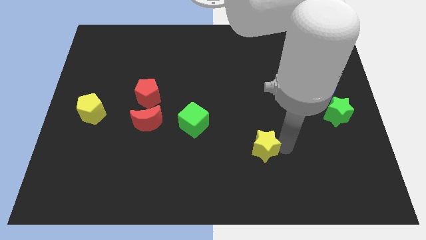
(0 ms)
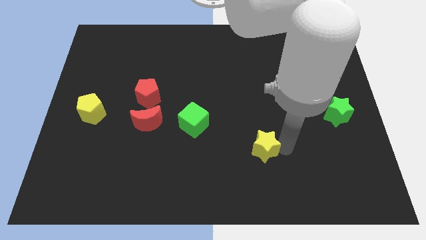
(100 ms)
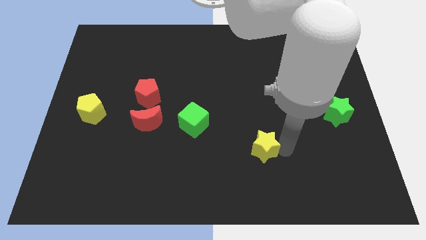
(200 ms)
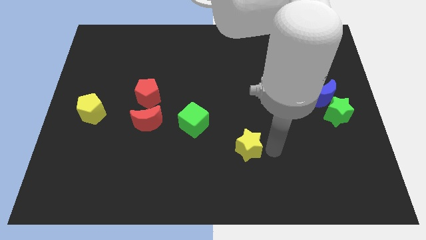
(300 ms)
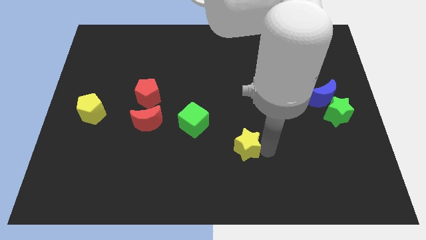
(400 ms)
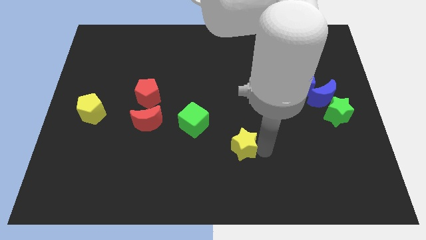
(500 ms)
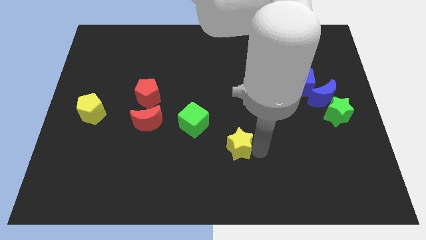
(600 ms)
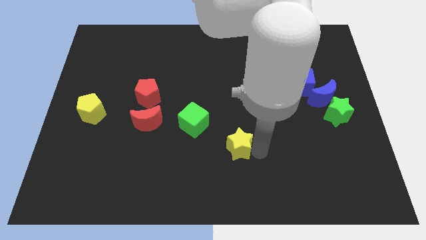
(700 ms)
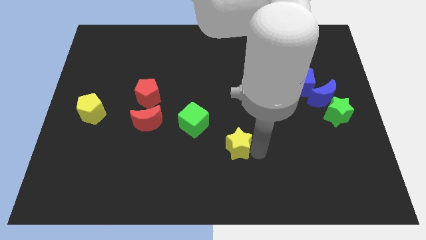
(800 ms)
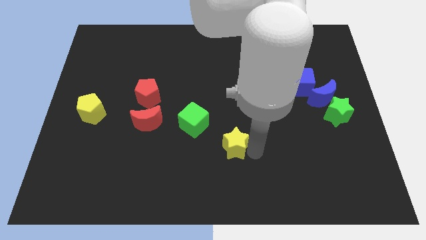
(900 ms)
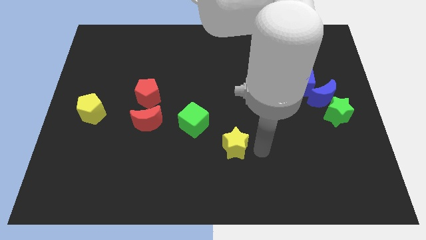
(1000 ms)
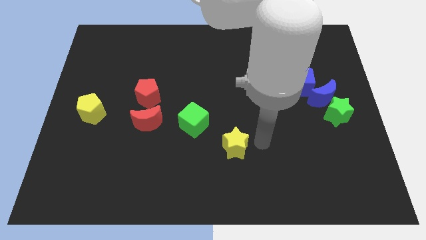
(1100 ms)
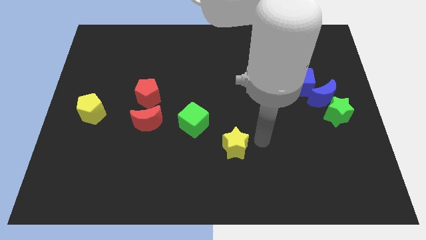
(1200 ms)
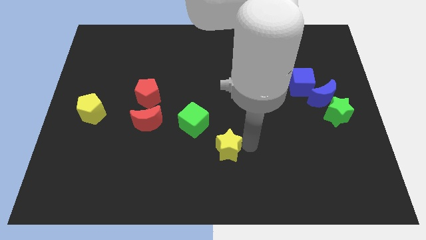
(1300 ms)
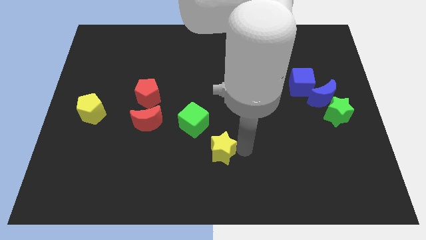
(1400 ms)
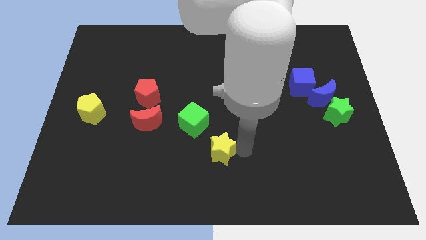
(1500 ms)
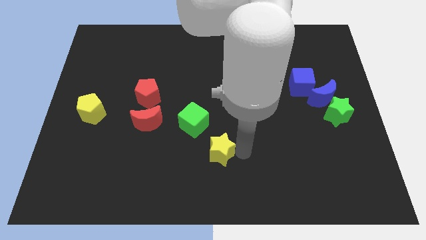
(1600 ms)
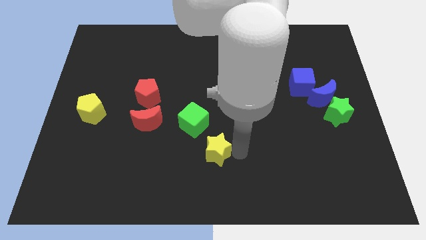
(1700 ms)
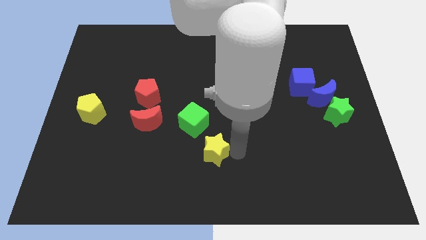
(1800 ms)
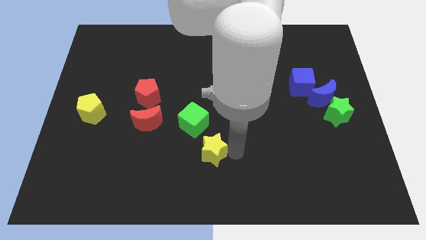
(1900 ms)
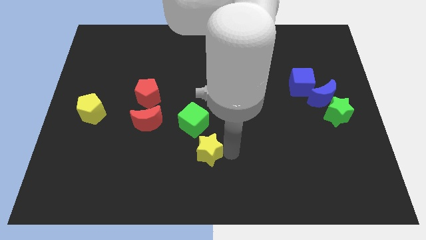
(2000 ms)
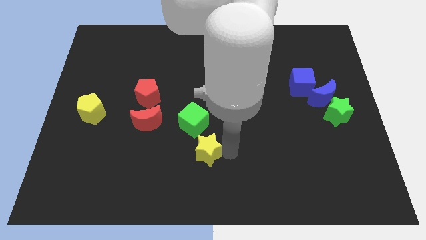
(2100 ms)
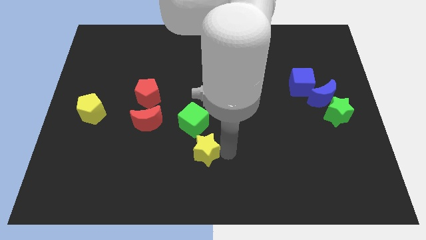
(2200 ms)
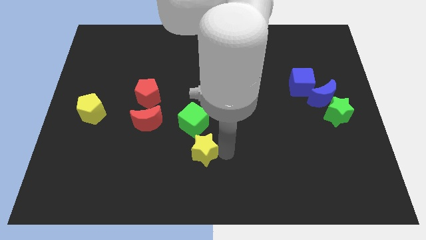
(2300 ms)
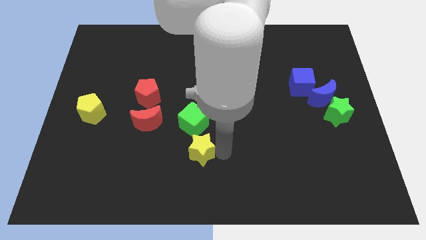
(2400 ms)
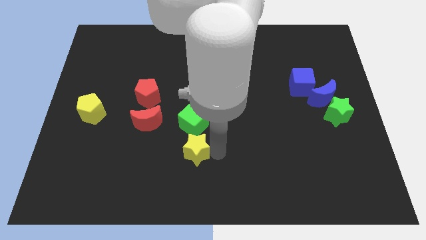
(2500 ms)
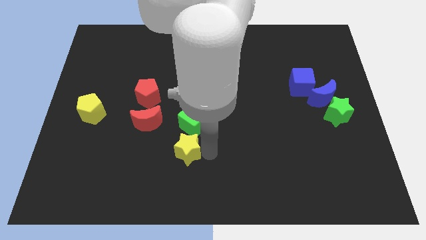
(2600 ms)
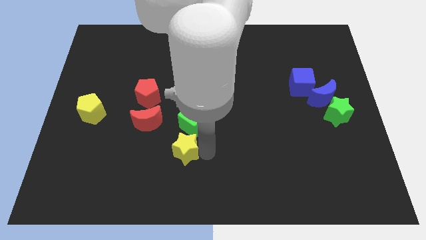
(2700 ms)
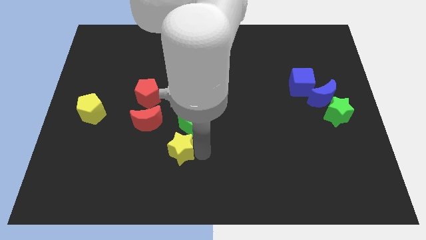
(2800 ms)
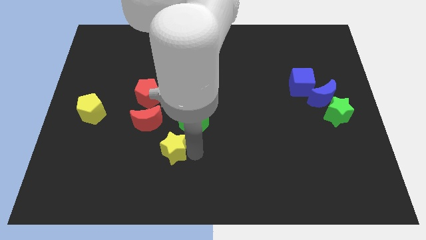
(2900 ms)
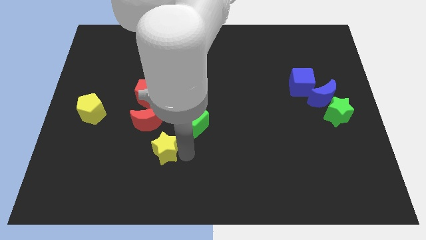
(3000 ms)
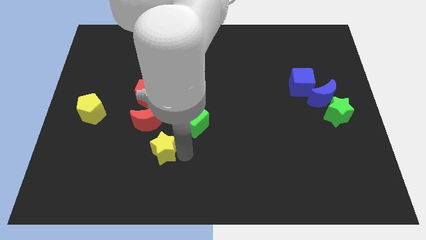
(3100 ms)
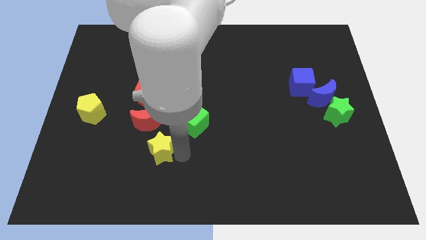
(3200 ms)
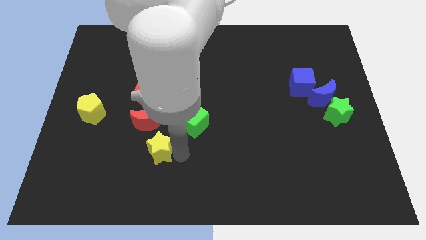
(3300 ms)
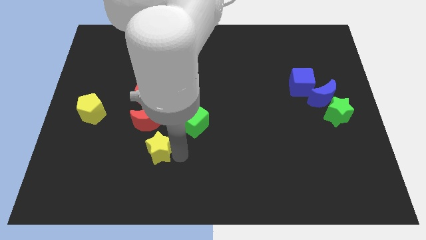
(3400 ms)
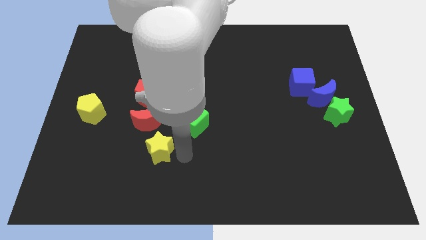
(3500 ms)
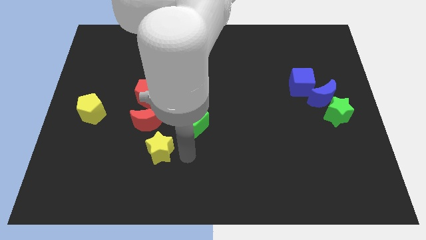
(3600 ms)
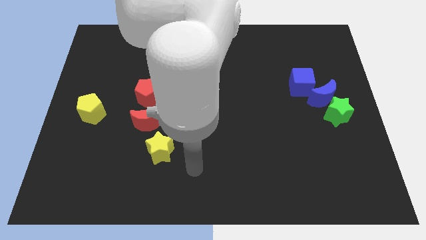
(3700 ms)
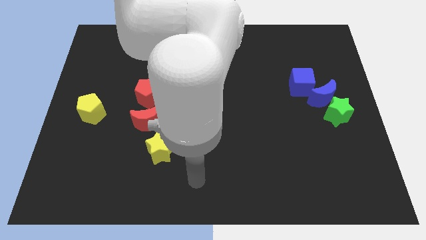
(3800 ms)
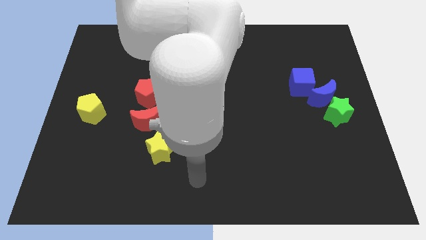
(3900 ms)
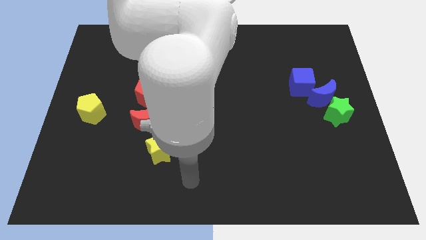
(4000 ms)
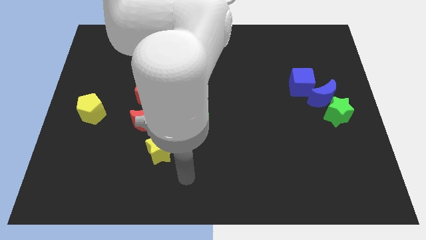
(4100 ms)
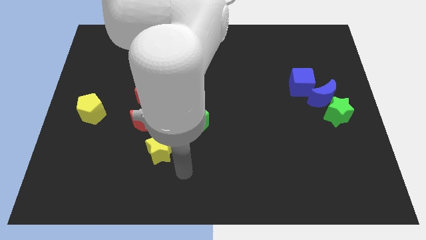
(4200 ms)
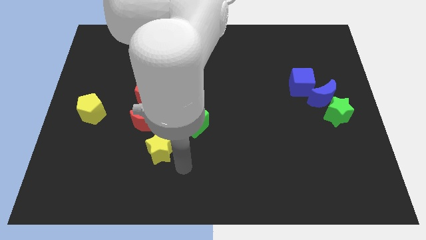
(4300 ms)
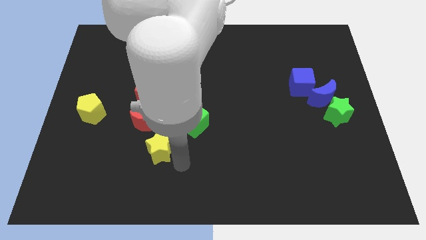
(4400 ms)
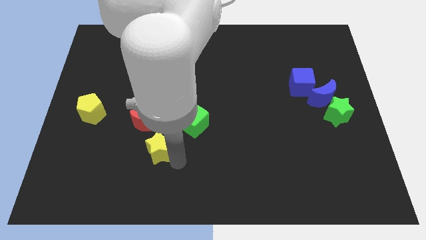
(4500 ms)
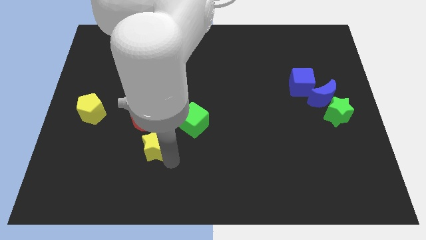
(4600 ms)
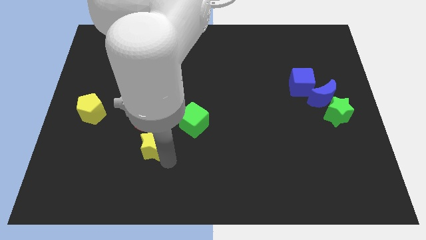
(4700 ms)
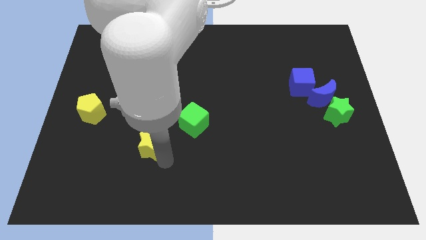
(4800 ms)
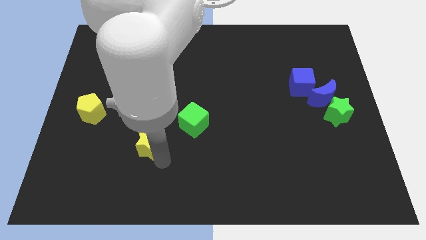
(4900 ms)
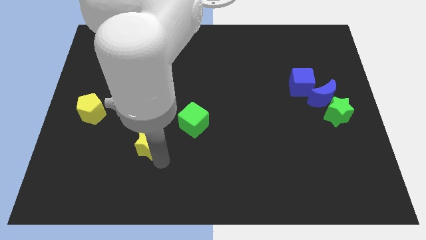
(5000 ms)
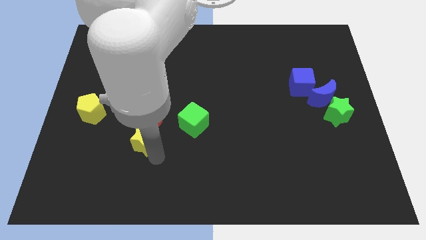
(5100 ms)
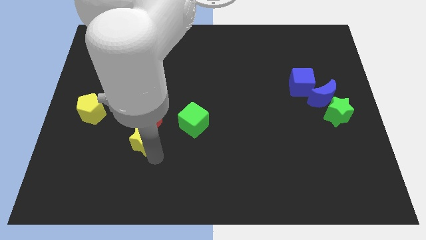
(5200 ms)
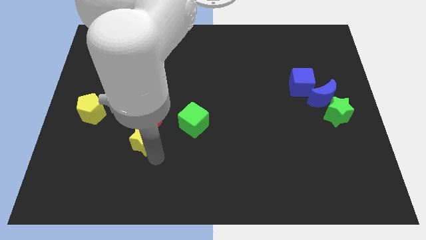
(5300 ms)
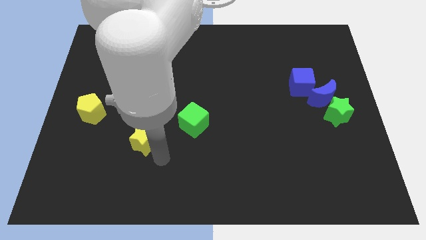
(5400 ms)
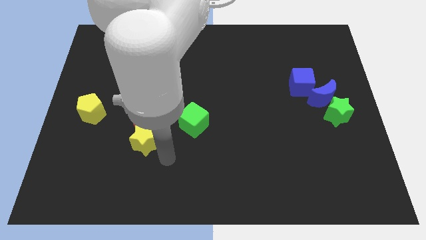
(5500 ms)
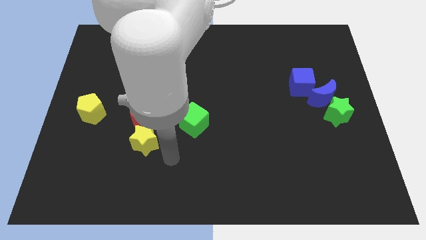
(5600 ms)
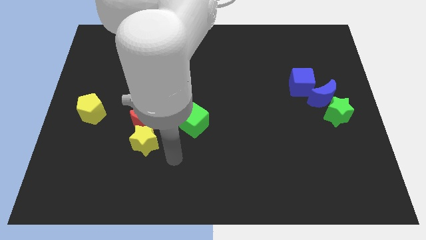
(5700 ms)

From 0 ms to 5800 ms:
slide the yellow star towards the bottom side of the red blocks

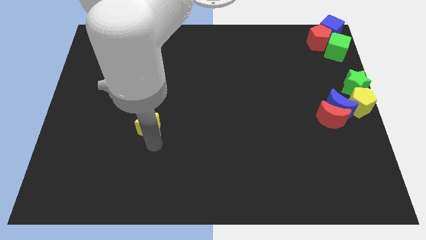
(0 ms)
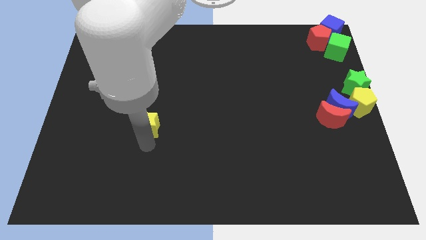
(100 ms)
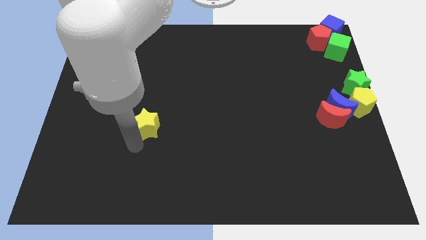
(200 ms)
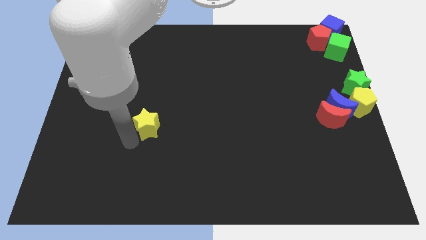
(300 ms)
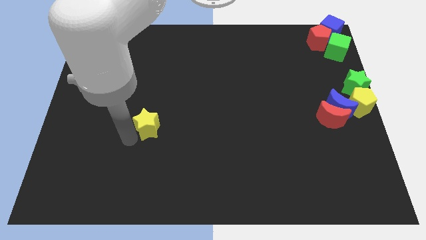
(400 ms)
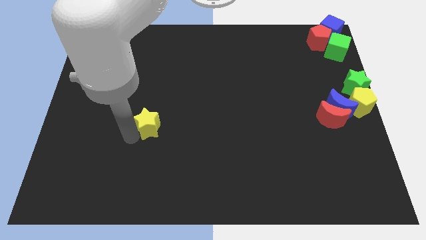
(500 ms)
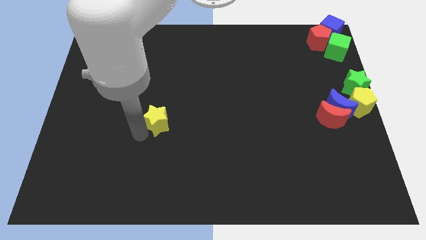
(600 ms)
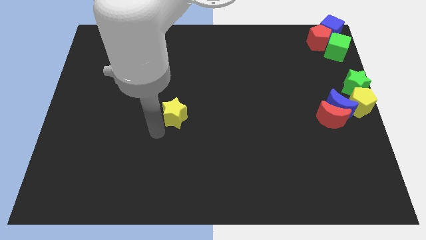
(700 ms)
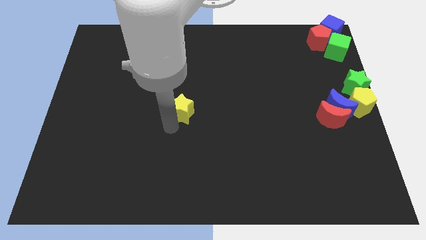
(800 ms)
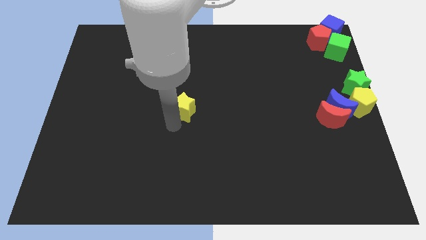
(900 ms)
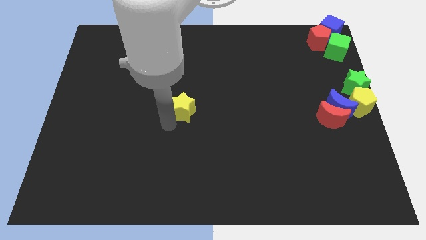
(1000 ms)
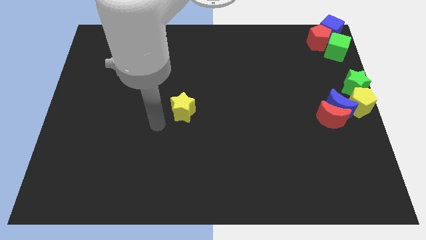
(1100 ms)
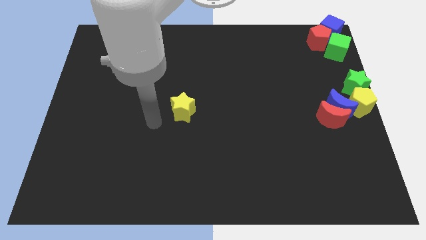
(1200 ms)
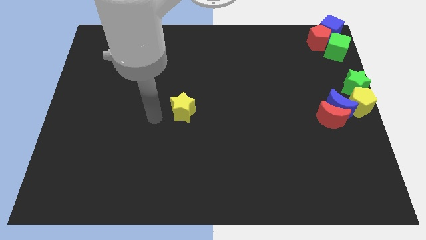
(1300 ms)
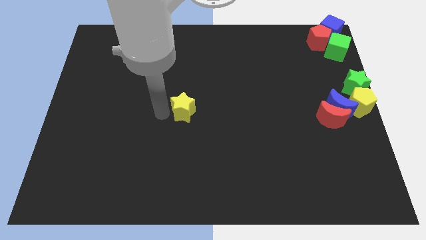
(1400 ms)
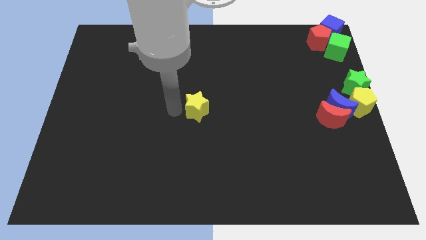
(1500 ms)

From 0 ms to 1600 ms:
push the yellow star towards the center of the board

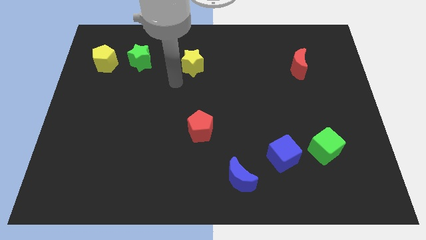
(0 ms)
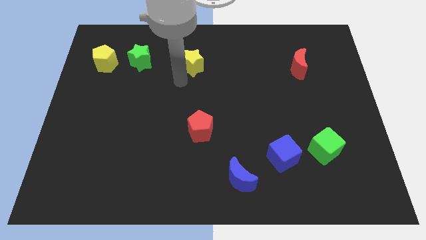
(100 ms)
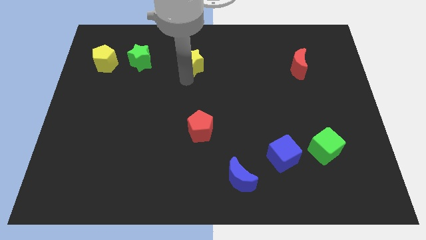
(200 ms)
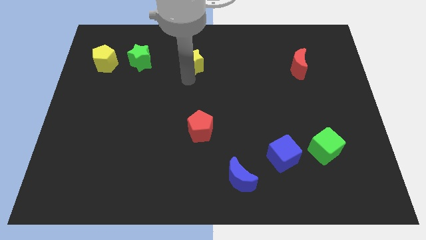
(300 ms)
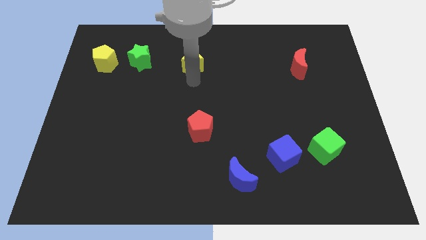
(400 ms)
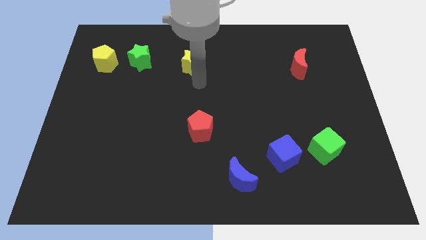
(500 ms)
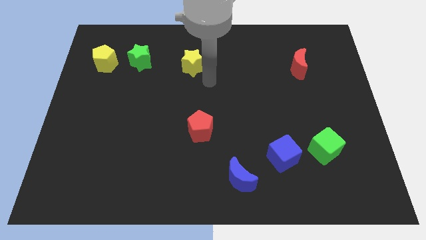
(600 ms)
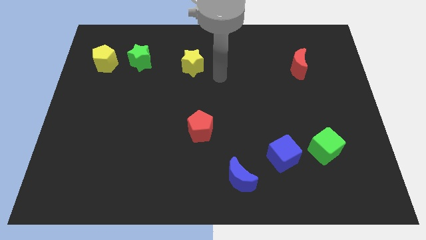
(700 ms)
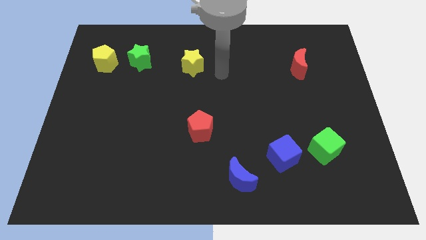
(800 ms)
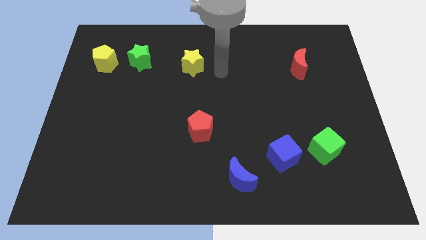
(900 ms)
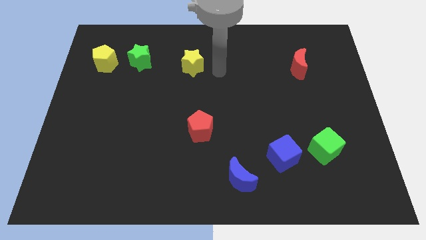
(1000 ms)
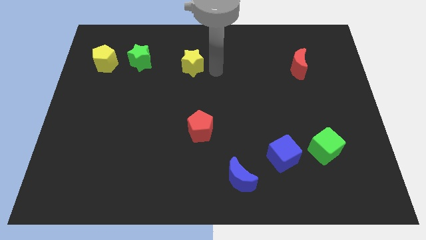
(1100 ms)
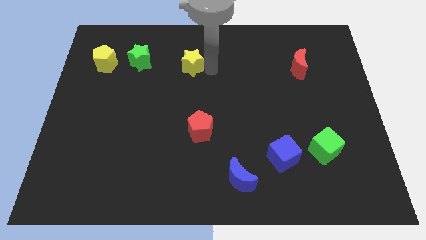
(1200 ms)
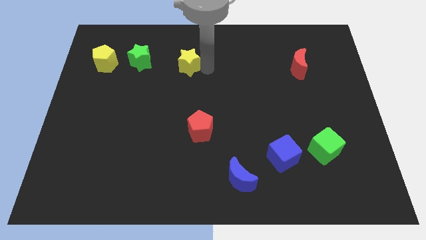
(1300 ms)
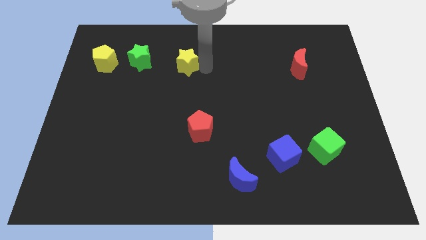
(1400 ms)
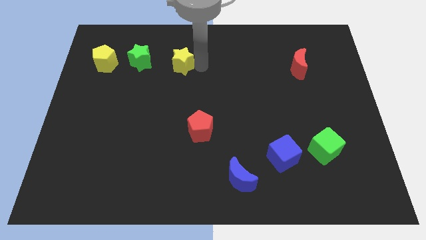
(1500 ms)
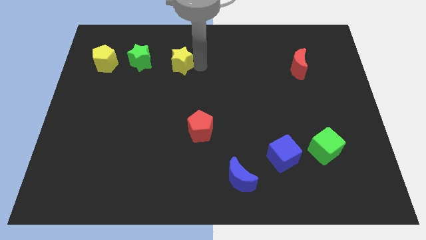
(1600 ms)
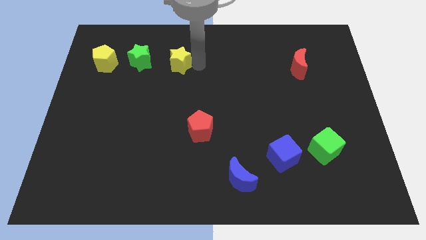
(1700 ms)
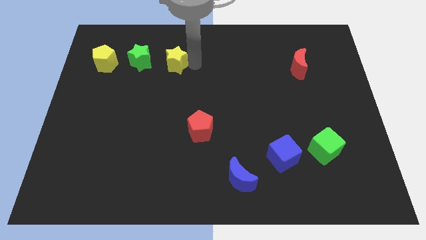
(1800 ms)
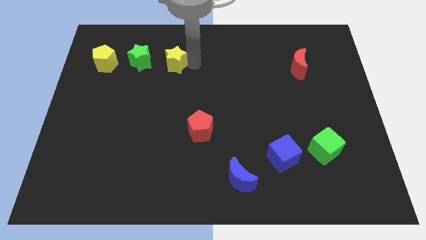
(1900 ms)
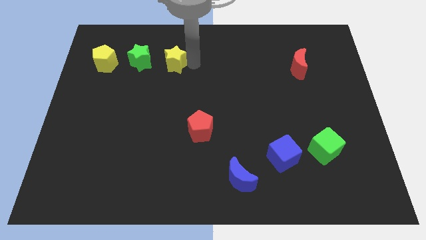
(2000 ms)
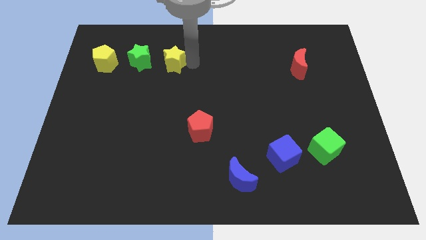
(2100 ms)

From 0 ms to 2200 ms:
push the yellow star close to the green star
